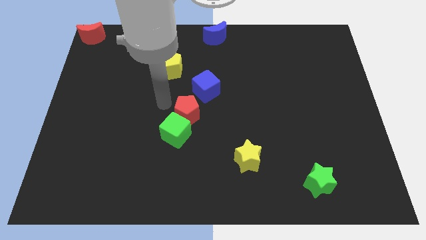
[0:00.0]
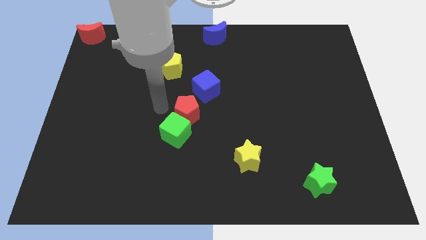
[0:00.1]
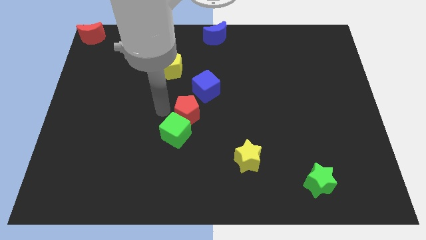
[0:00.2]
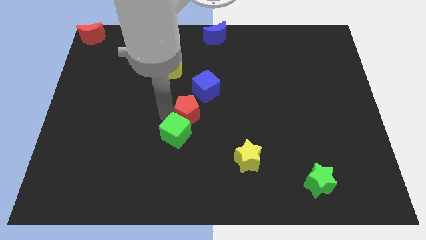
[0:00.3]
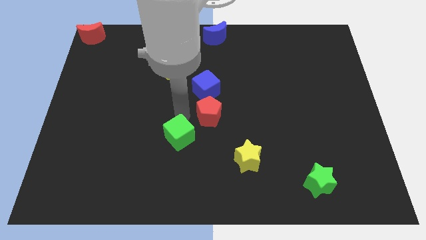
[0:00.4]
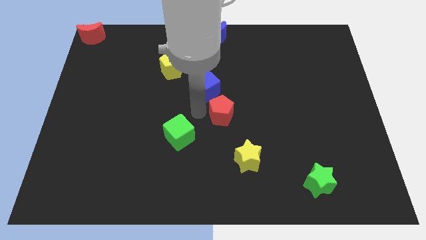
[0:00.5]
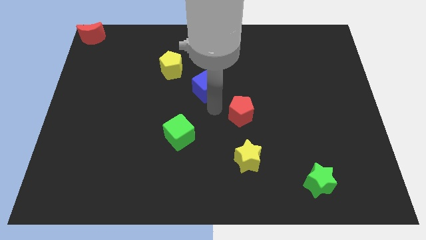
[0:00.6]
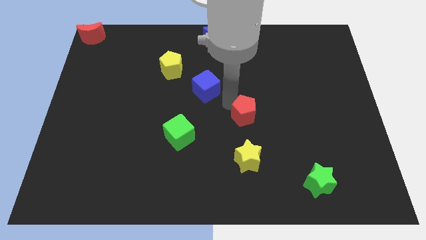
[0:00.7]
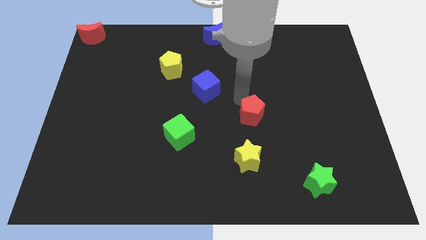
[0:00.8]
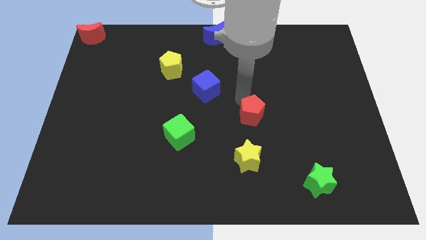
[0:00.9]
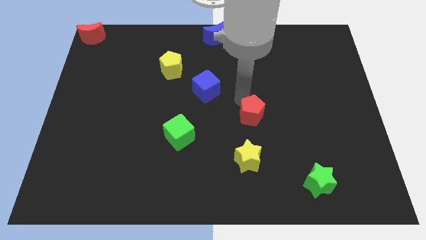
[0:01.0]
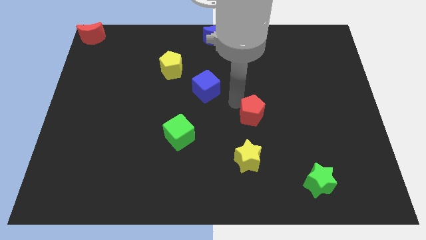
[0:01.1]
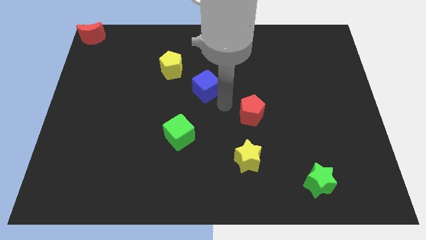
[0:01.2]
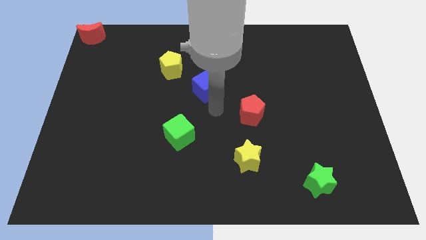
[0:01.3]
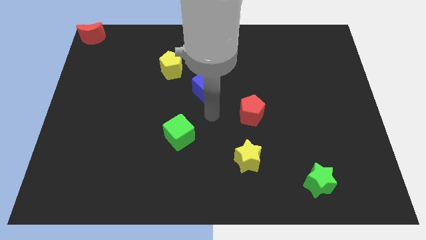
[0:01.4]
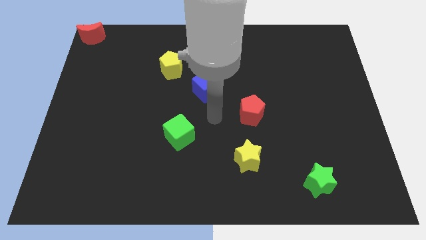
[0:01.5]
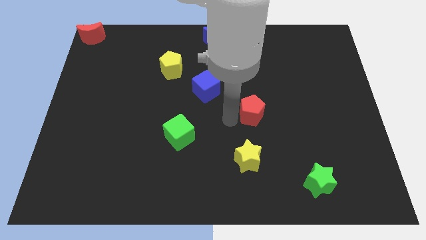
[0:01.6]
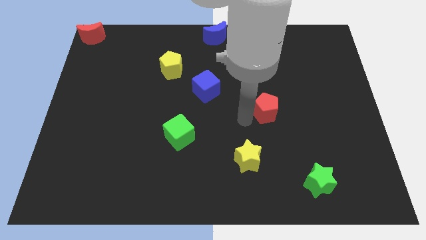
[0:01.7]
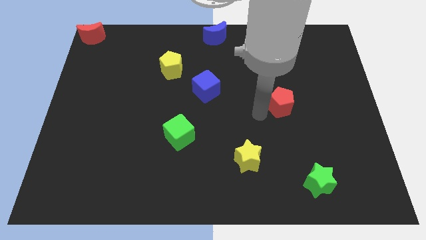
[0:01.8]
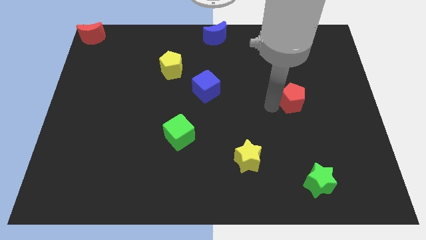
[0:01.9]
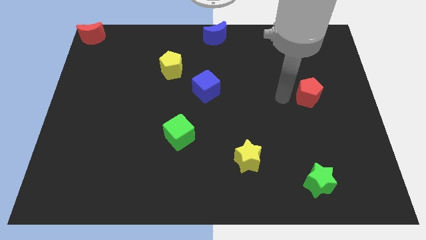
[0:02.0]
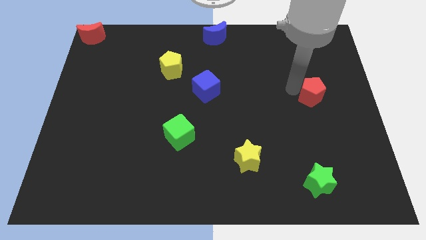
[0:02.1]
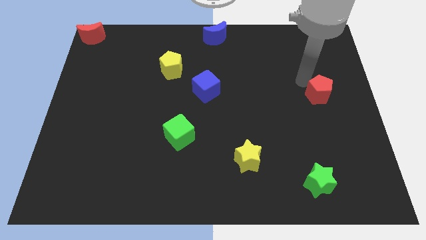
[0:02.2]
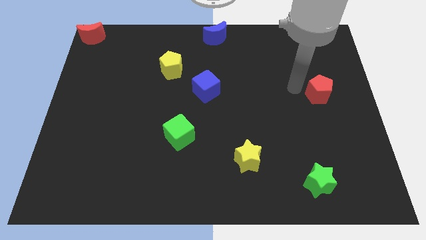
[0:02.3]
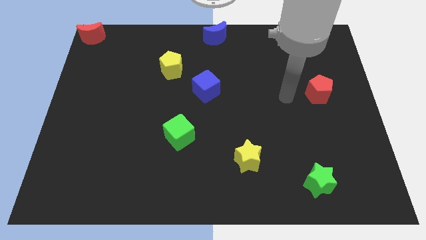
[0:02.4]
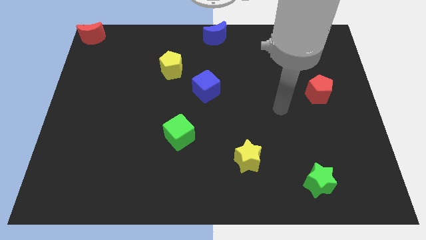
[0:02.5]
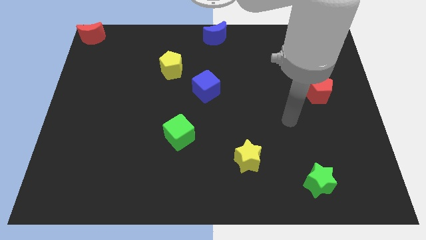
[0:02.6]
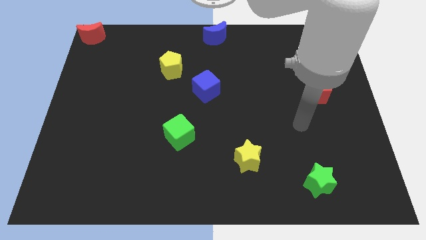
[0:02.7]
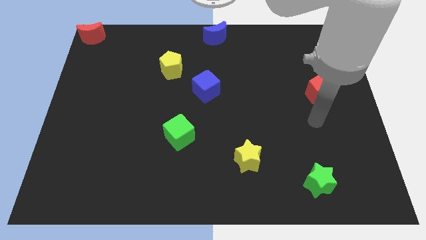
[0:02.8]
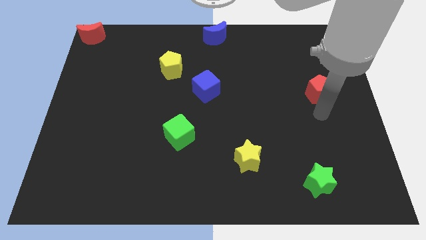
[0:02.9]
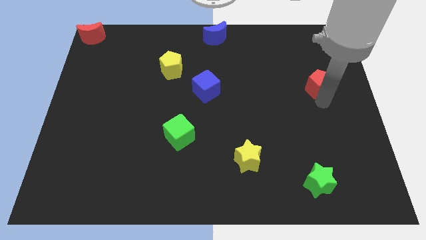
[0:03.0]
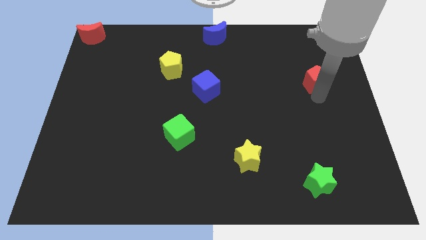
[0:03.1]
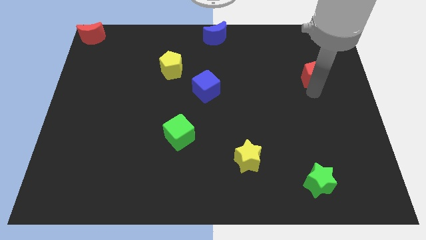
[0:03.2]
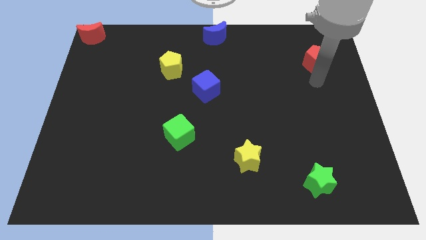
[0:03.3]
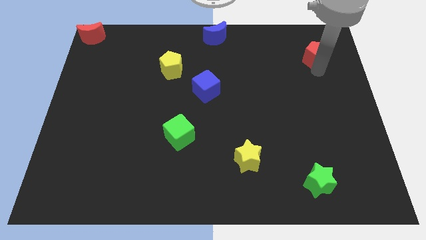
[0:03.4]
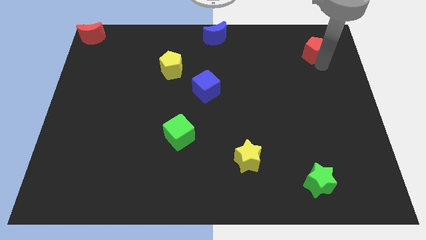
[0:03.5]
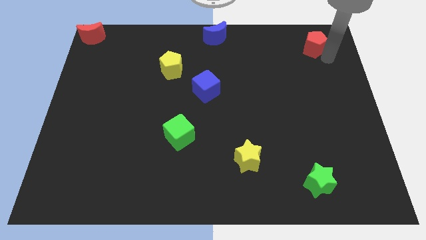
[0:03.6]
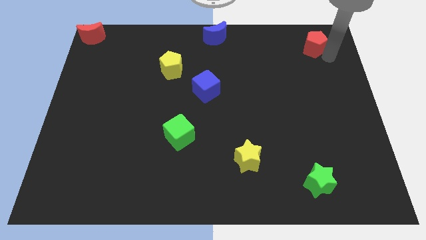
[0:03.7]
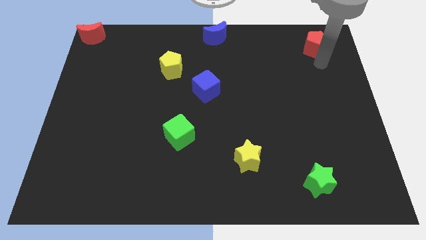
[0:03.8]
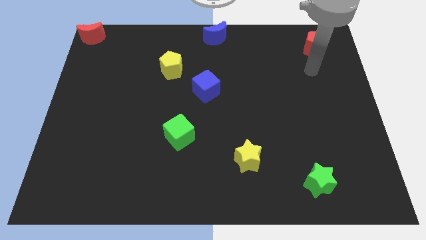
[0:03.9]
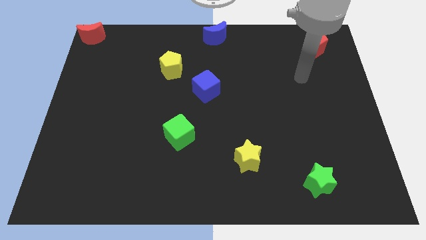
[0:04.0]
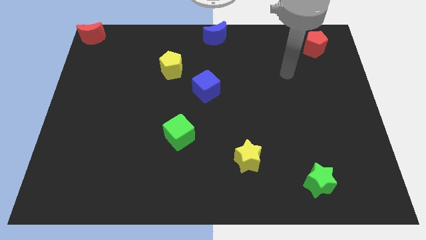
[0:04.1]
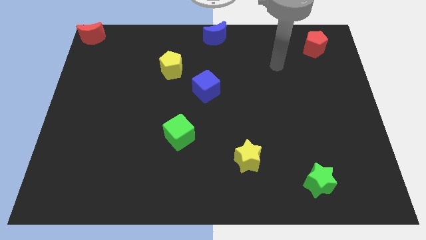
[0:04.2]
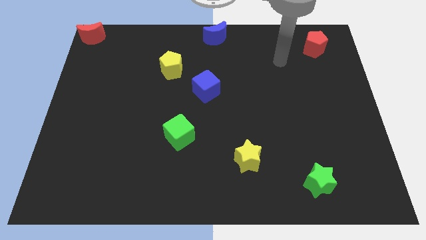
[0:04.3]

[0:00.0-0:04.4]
slide the red pentagon towards the top right side of the board

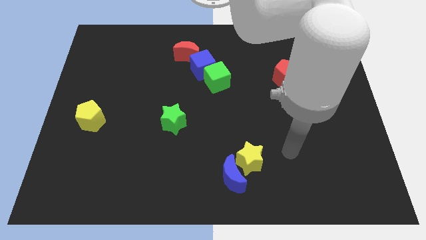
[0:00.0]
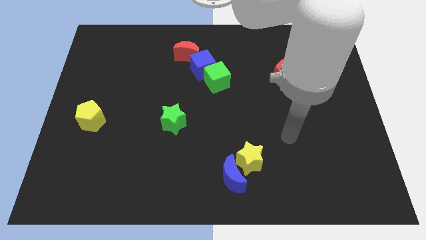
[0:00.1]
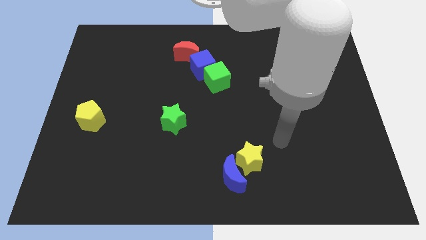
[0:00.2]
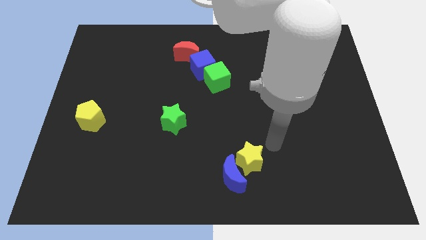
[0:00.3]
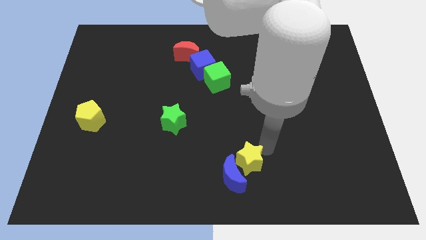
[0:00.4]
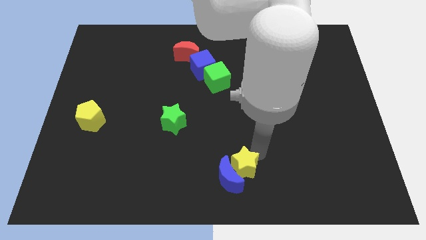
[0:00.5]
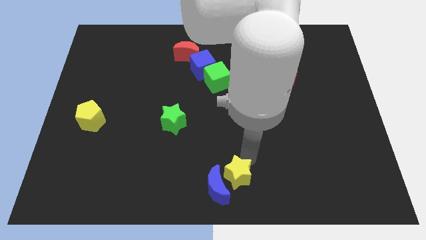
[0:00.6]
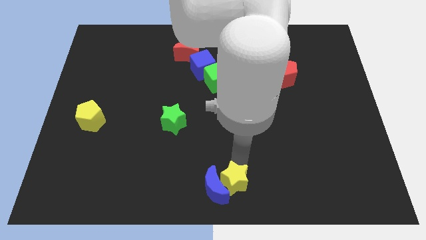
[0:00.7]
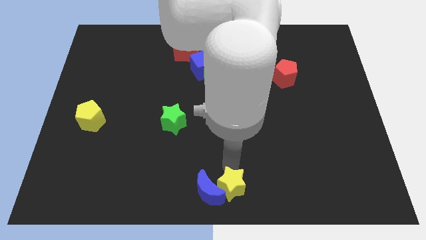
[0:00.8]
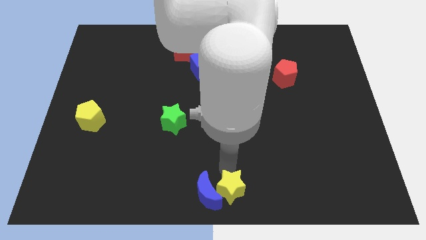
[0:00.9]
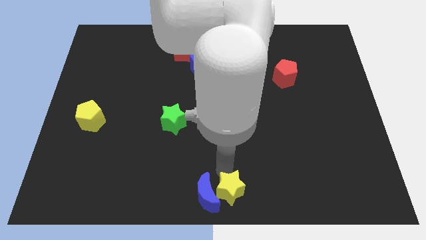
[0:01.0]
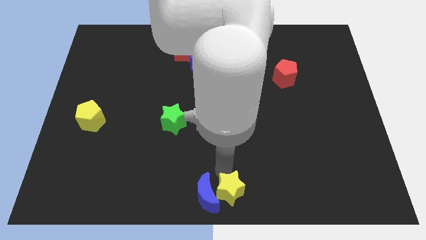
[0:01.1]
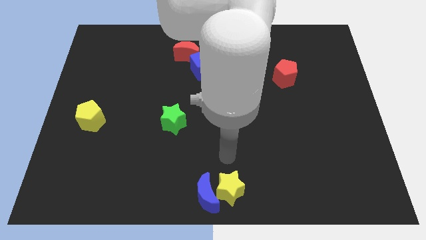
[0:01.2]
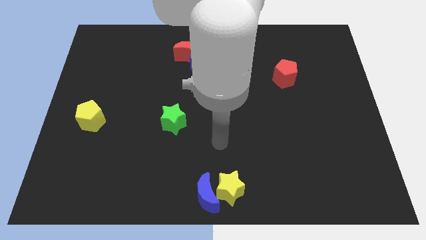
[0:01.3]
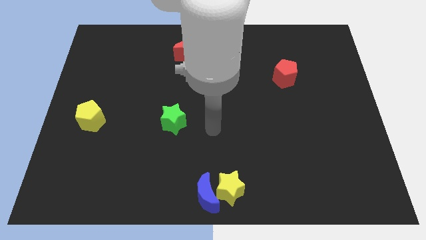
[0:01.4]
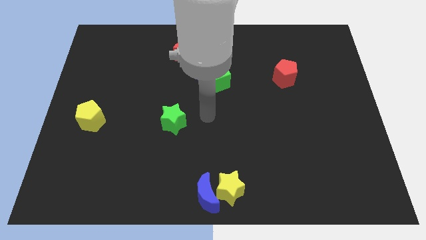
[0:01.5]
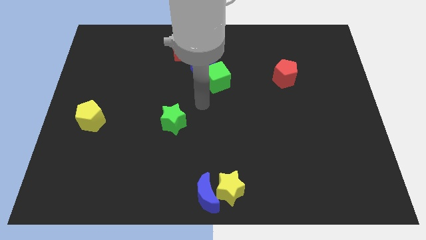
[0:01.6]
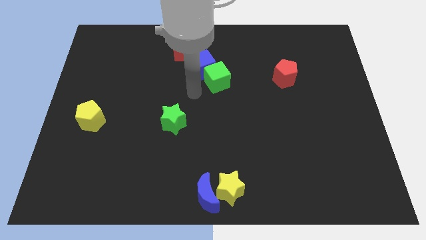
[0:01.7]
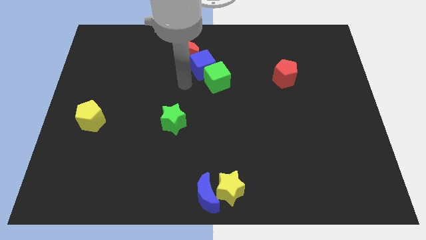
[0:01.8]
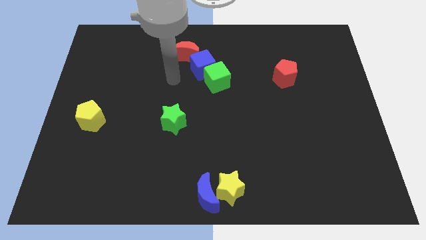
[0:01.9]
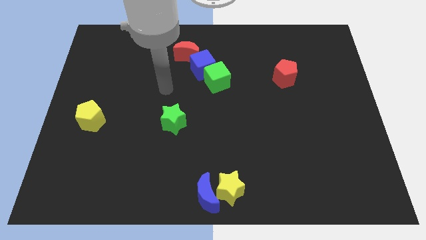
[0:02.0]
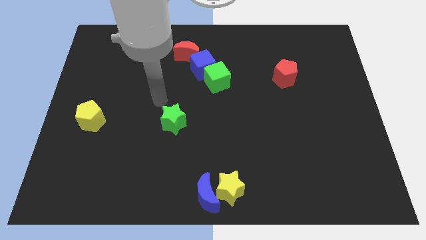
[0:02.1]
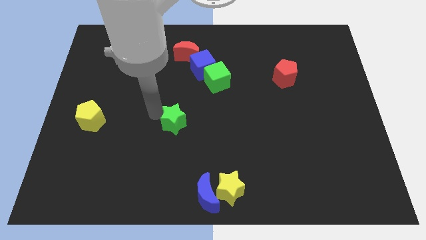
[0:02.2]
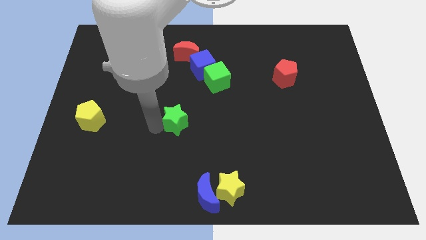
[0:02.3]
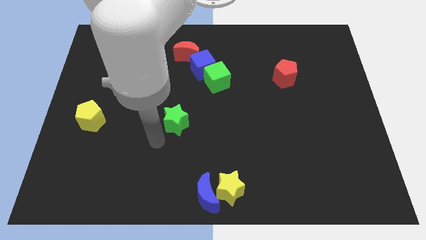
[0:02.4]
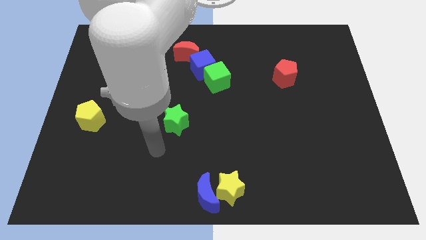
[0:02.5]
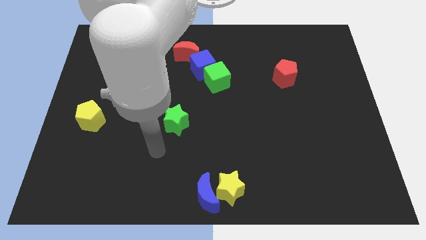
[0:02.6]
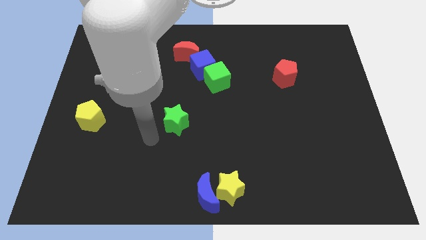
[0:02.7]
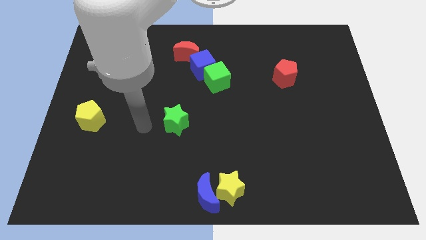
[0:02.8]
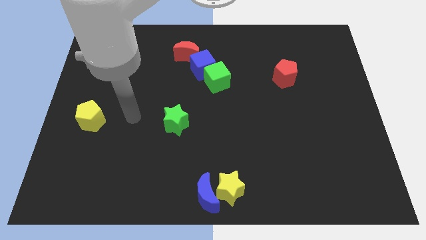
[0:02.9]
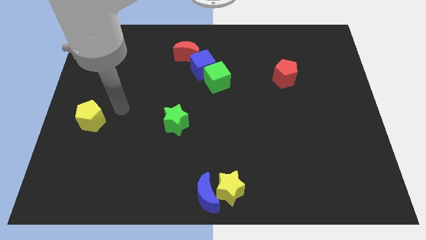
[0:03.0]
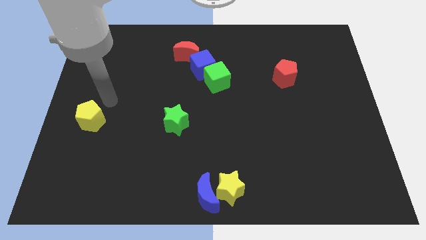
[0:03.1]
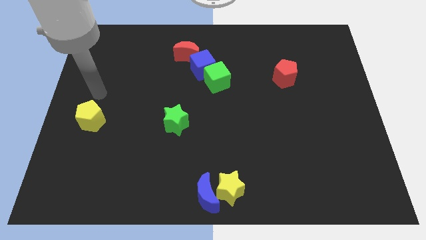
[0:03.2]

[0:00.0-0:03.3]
point your arm above the yellow pentagon

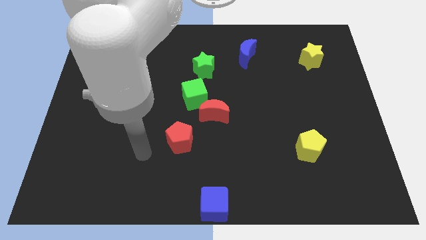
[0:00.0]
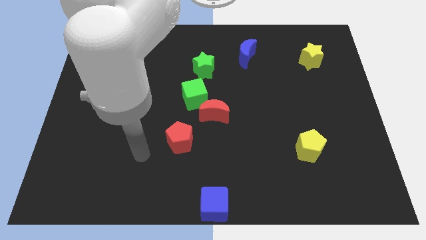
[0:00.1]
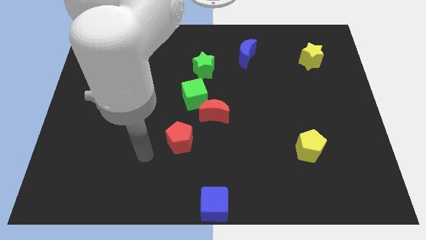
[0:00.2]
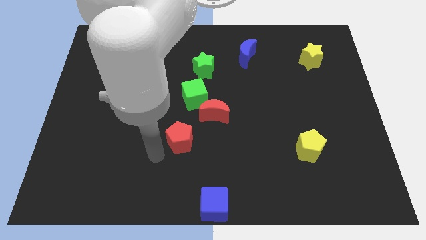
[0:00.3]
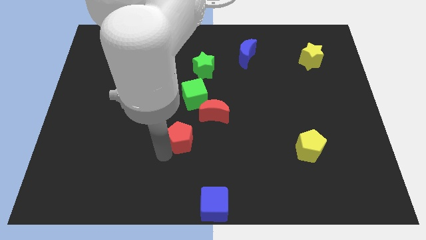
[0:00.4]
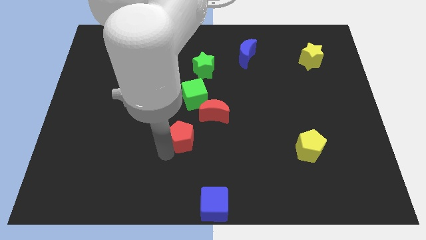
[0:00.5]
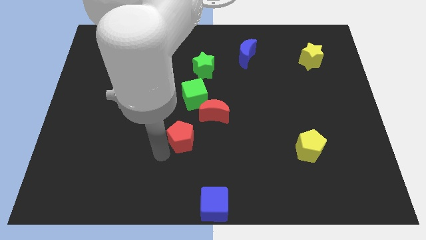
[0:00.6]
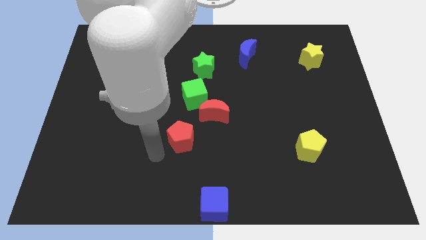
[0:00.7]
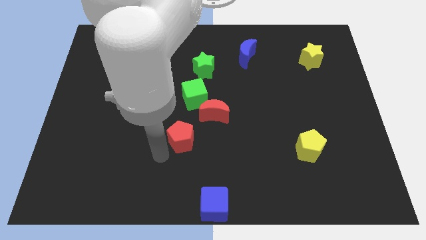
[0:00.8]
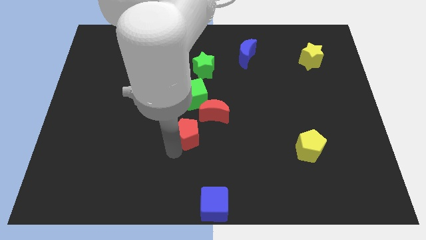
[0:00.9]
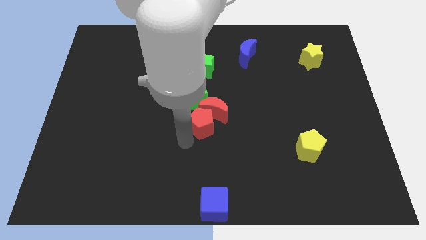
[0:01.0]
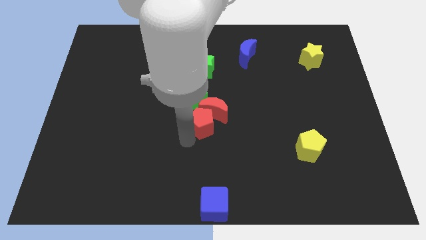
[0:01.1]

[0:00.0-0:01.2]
group up the two red blocks
